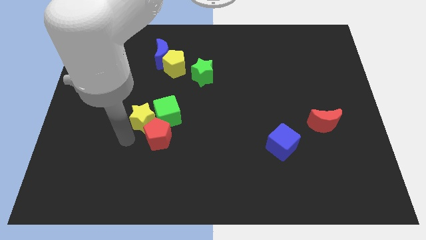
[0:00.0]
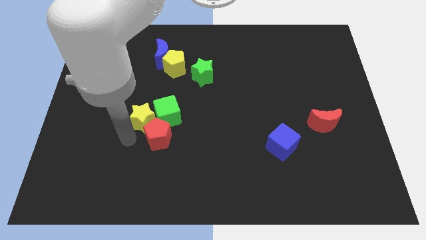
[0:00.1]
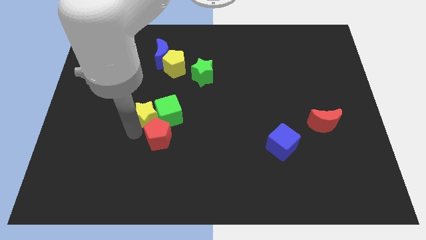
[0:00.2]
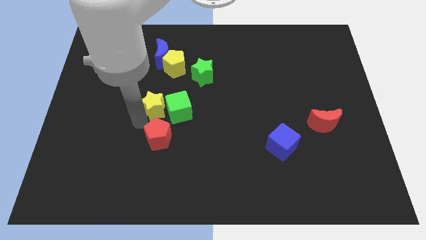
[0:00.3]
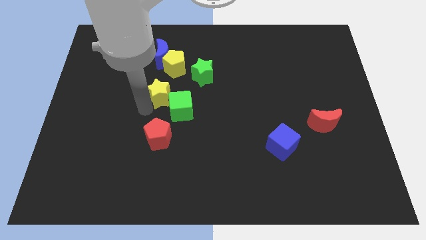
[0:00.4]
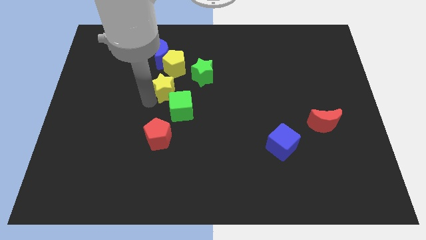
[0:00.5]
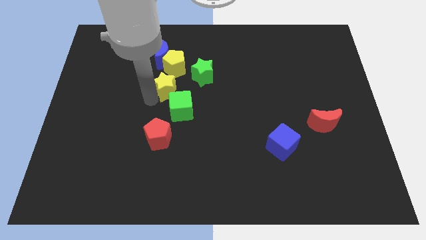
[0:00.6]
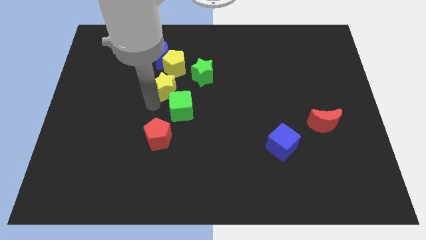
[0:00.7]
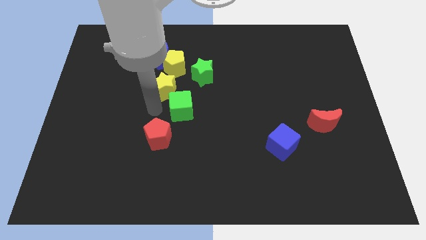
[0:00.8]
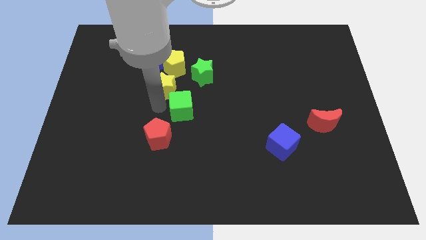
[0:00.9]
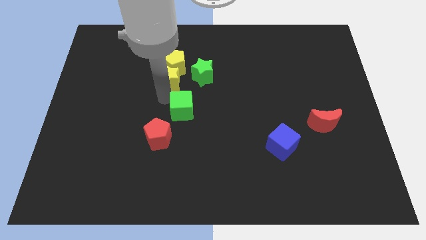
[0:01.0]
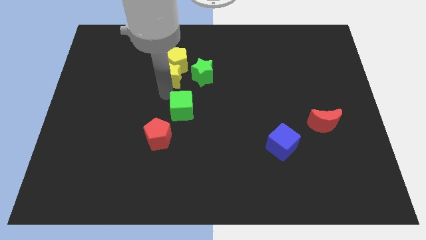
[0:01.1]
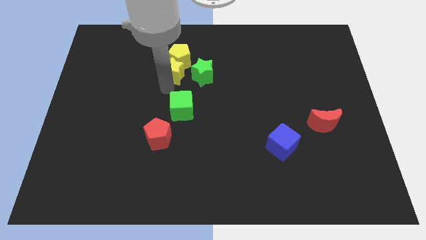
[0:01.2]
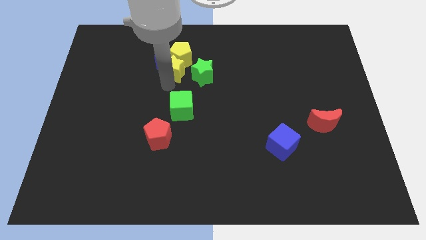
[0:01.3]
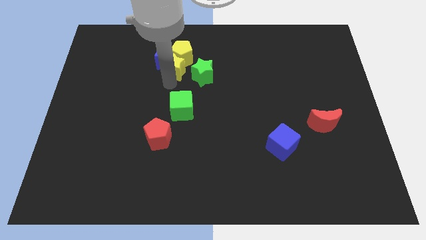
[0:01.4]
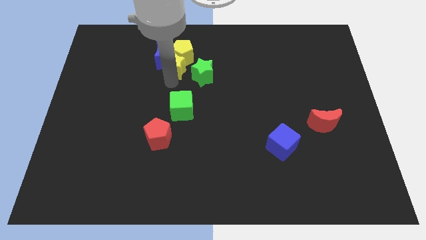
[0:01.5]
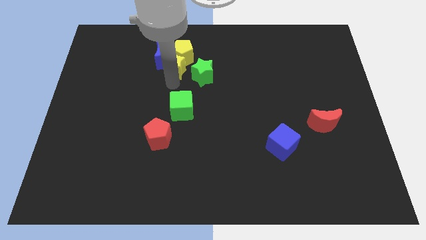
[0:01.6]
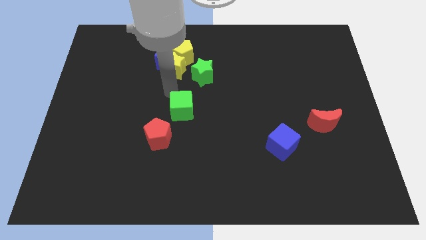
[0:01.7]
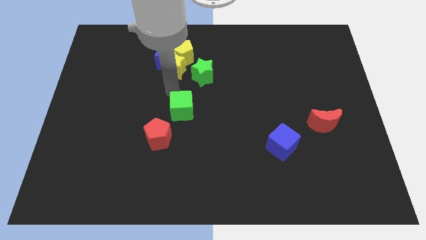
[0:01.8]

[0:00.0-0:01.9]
push the yellow blocks in between the green star and the blue moon

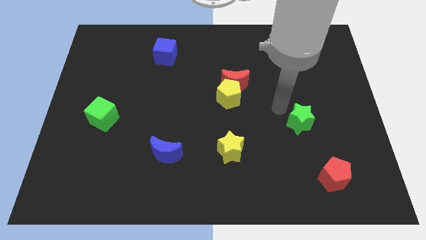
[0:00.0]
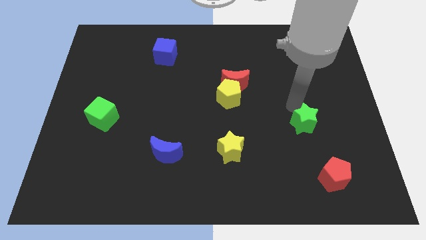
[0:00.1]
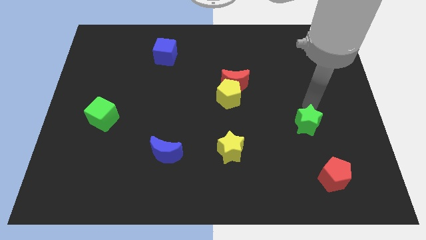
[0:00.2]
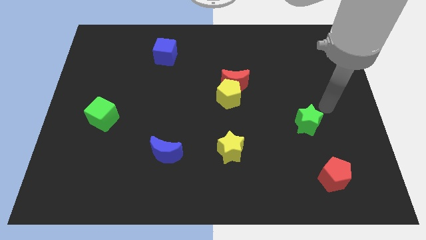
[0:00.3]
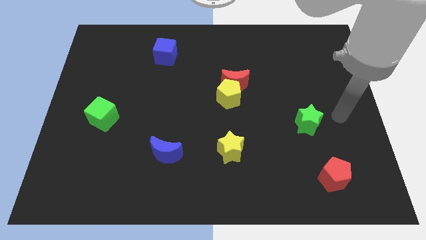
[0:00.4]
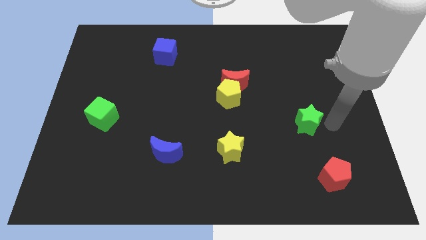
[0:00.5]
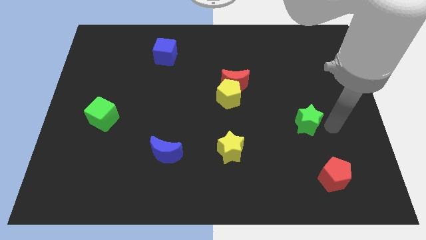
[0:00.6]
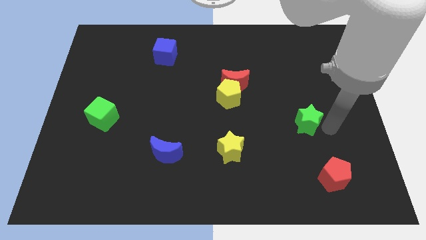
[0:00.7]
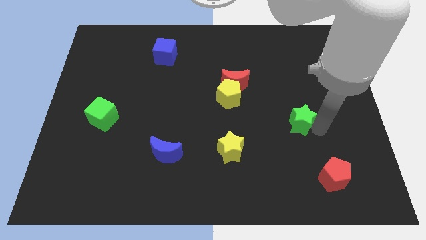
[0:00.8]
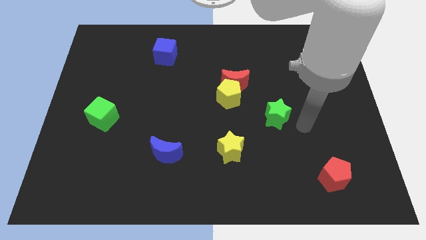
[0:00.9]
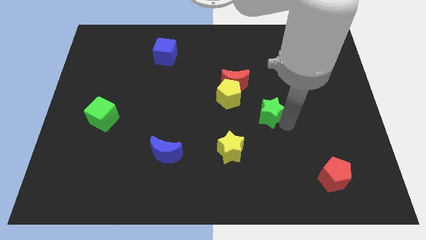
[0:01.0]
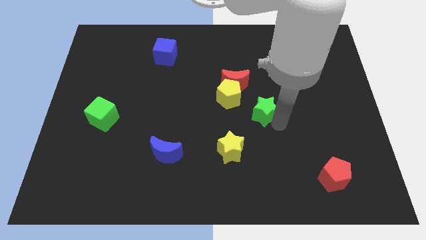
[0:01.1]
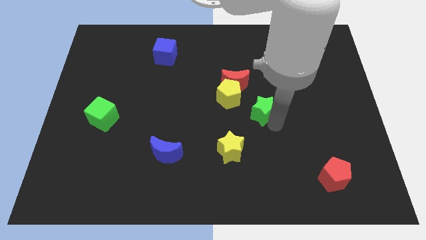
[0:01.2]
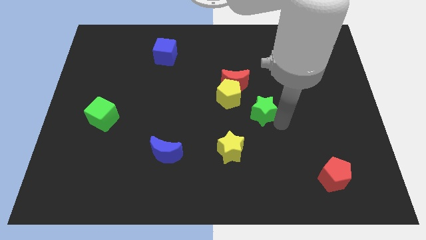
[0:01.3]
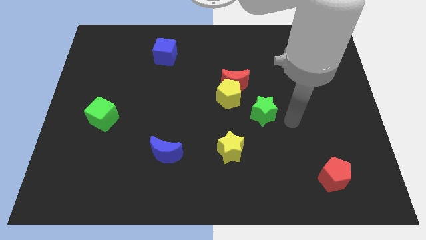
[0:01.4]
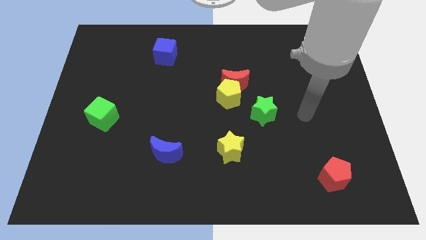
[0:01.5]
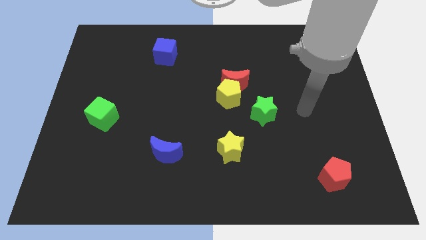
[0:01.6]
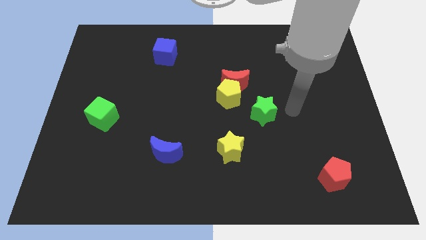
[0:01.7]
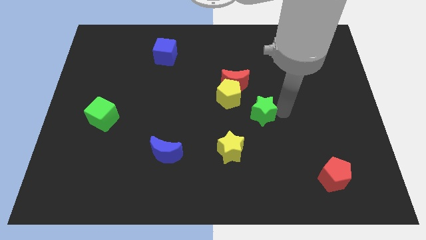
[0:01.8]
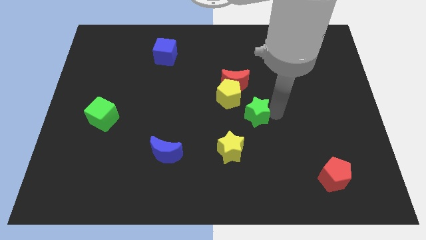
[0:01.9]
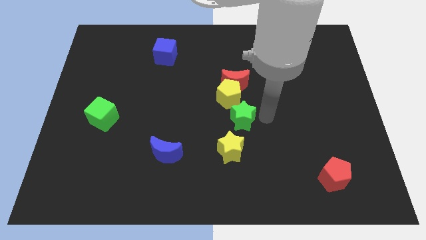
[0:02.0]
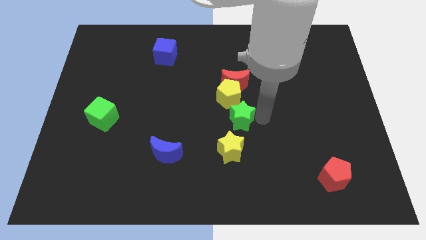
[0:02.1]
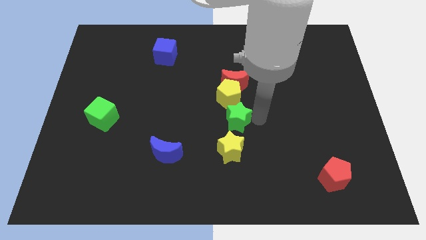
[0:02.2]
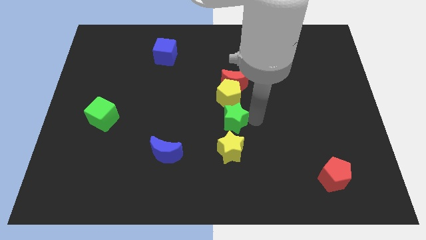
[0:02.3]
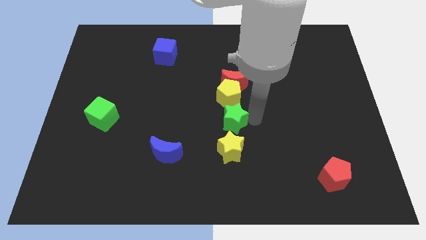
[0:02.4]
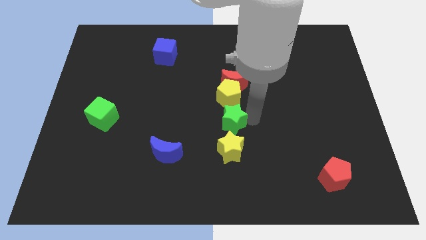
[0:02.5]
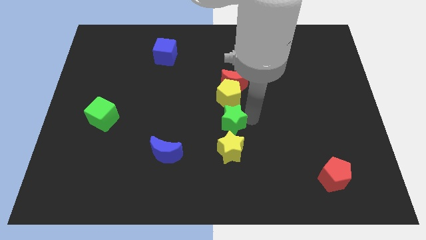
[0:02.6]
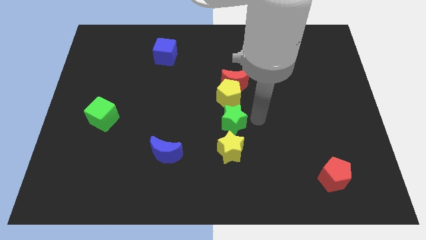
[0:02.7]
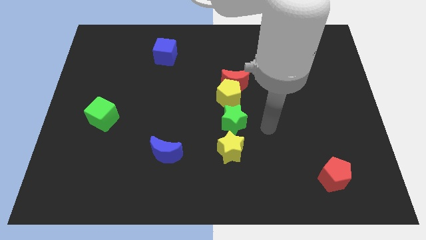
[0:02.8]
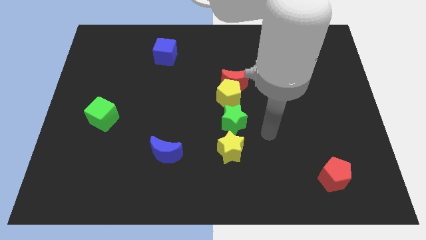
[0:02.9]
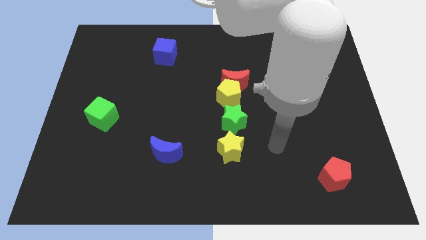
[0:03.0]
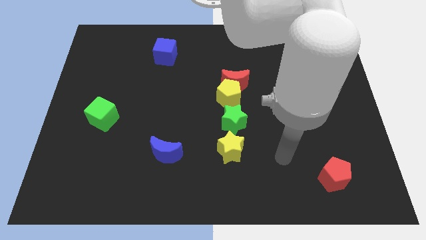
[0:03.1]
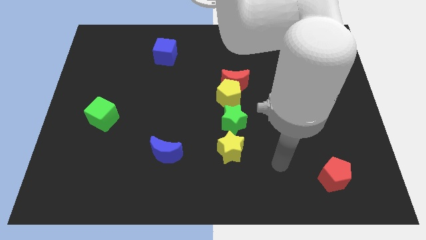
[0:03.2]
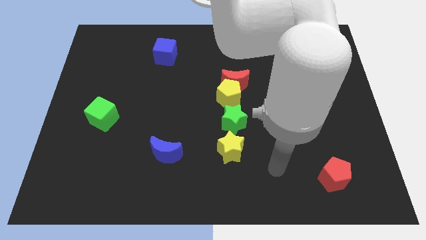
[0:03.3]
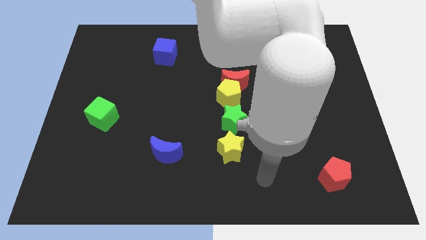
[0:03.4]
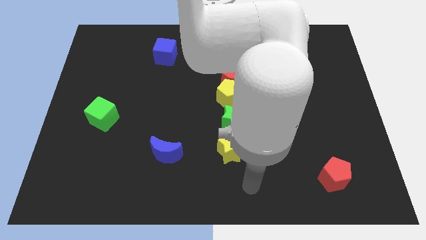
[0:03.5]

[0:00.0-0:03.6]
place the green star vertically above the yellow star

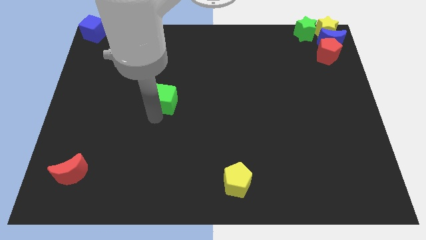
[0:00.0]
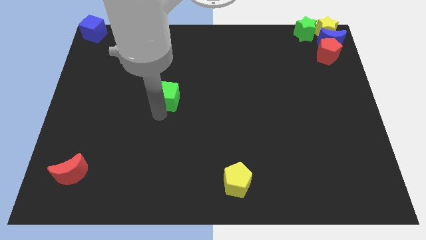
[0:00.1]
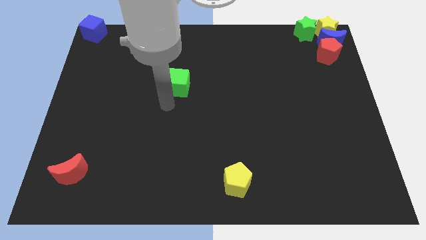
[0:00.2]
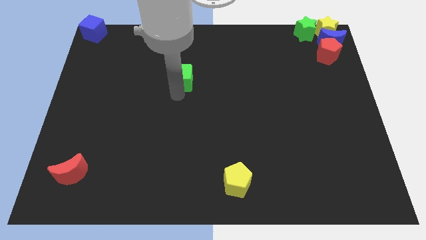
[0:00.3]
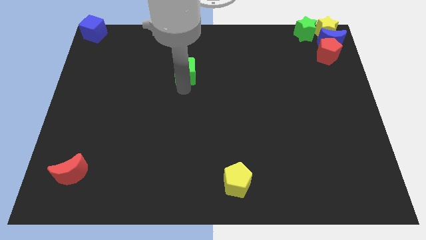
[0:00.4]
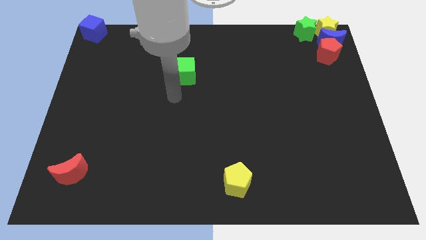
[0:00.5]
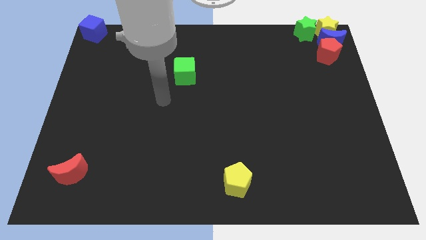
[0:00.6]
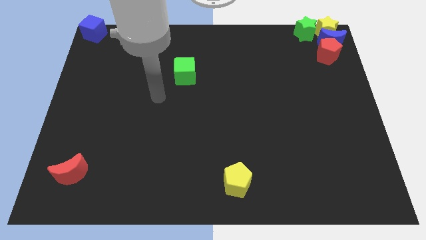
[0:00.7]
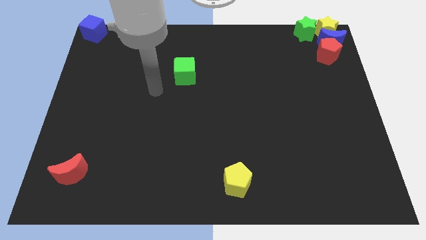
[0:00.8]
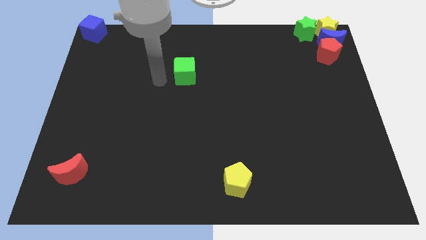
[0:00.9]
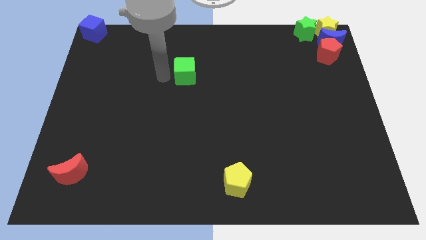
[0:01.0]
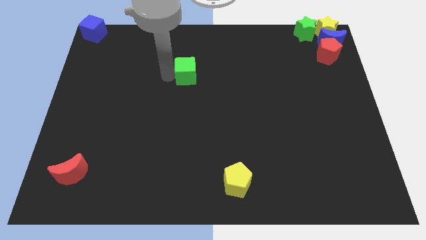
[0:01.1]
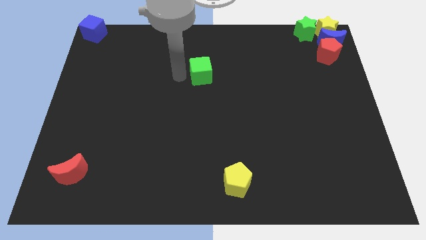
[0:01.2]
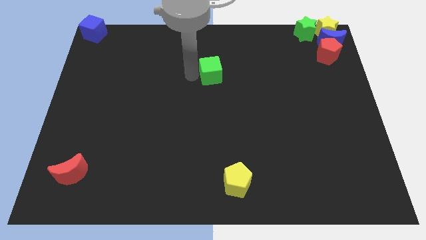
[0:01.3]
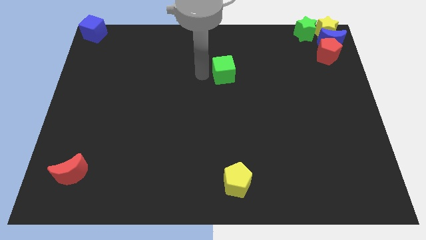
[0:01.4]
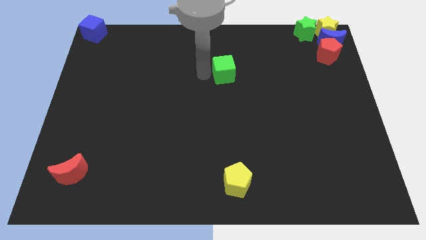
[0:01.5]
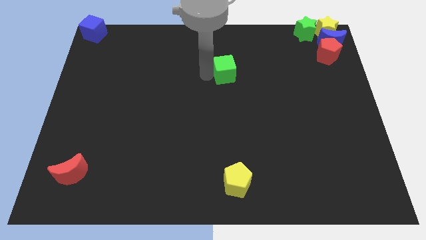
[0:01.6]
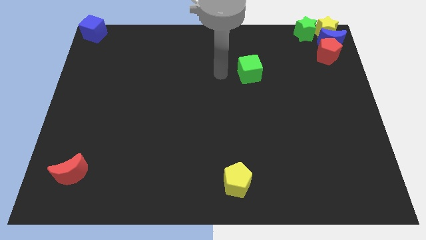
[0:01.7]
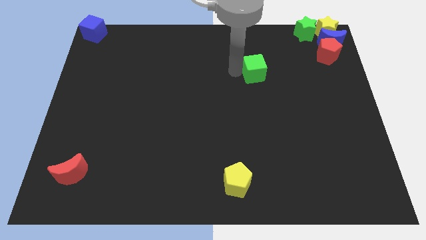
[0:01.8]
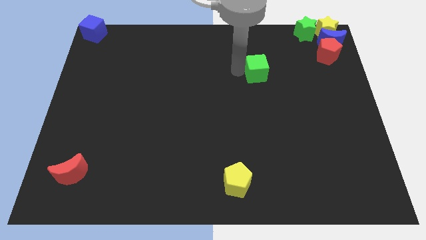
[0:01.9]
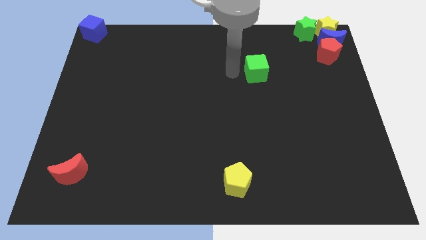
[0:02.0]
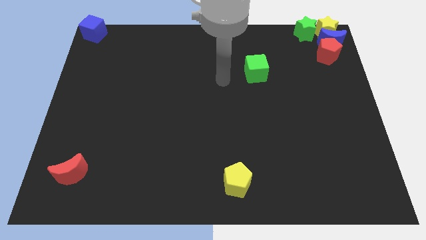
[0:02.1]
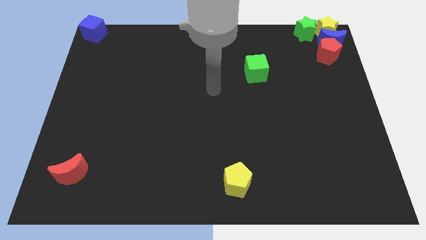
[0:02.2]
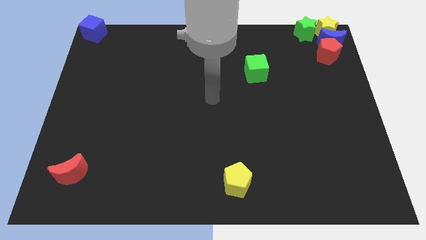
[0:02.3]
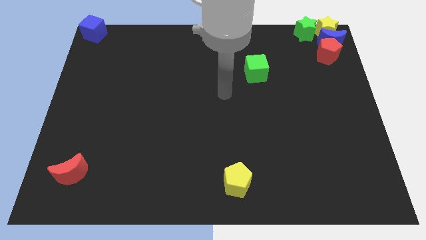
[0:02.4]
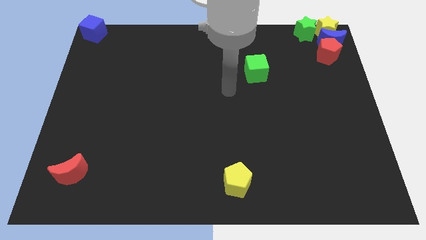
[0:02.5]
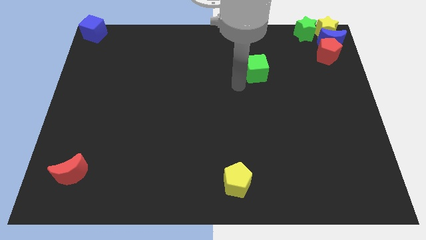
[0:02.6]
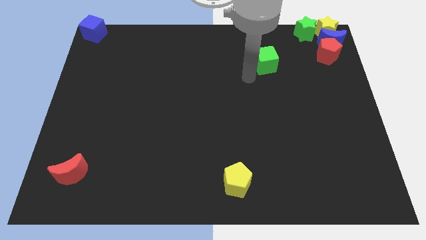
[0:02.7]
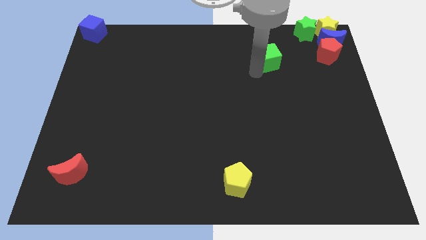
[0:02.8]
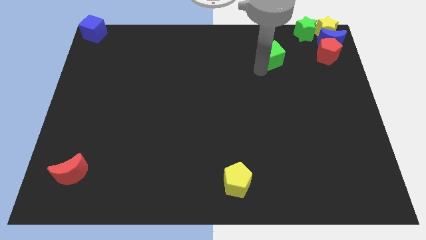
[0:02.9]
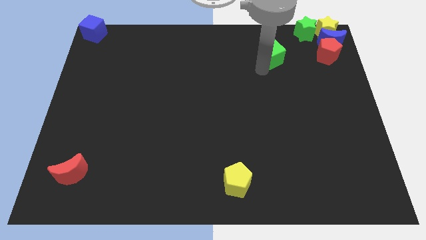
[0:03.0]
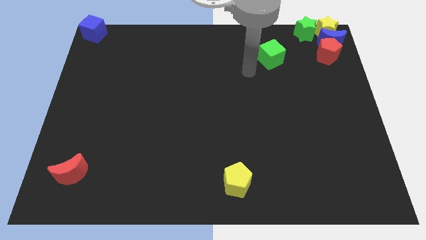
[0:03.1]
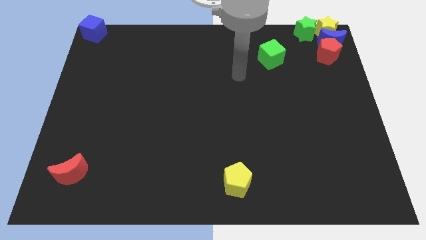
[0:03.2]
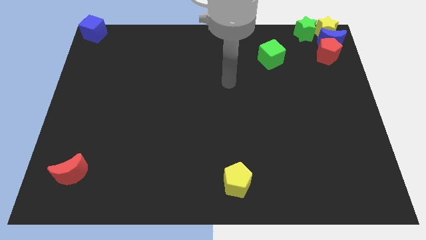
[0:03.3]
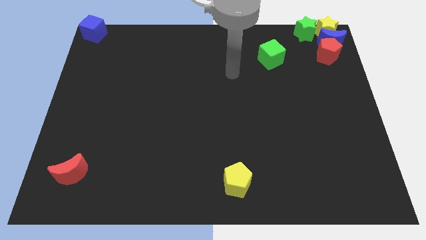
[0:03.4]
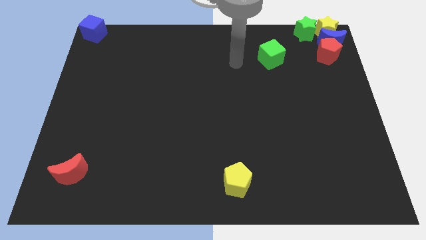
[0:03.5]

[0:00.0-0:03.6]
place the green cube towards group of blocks
